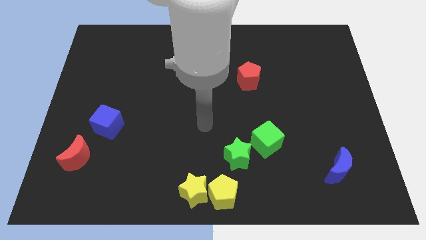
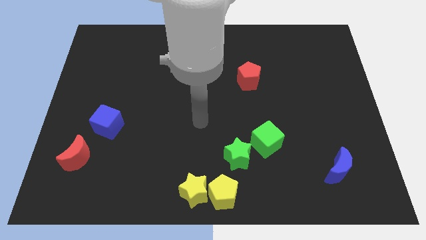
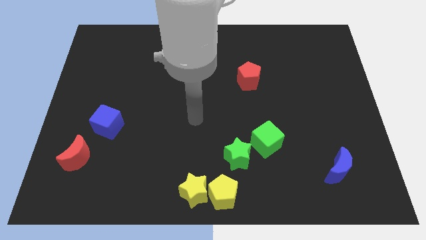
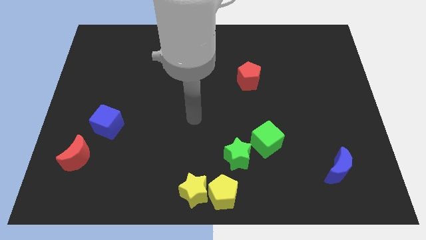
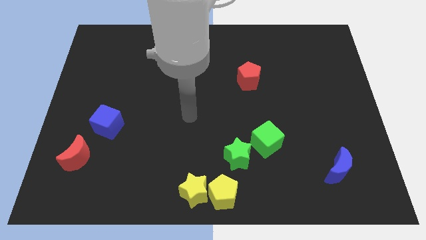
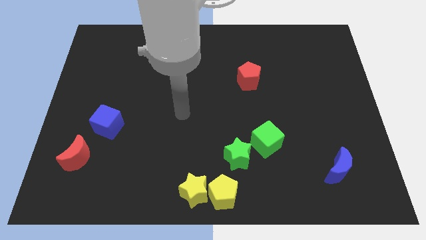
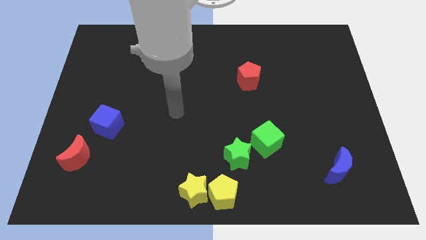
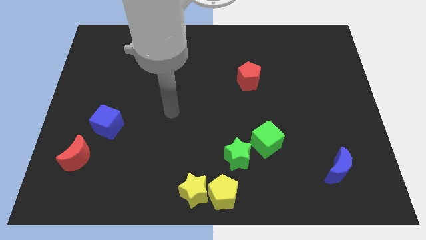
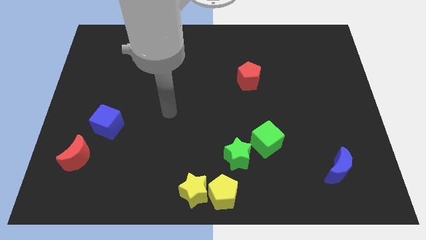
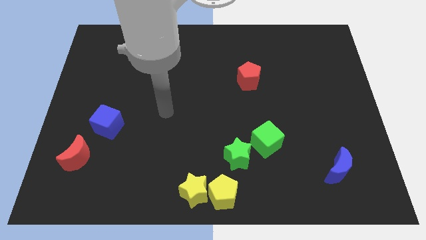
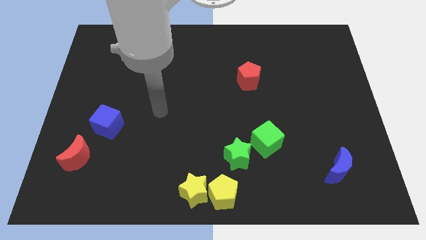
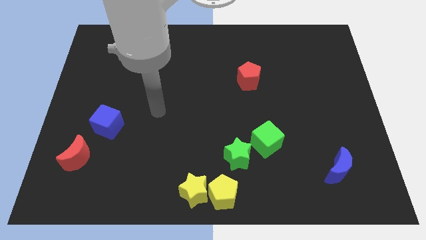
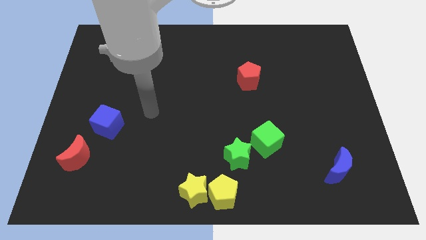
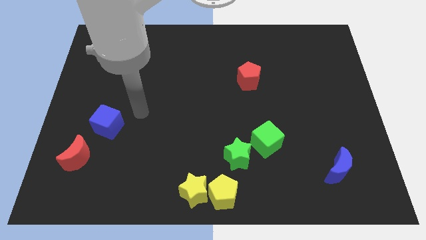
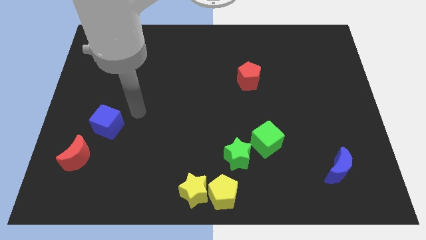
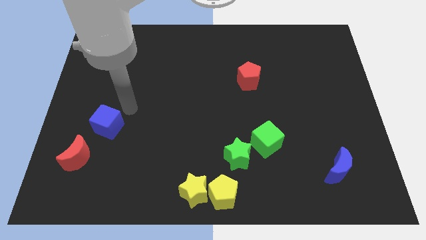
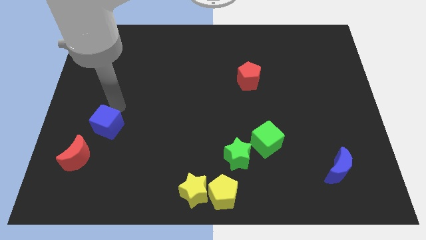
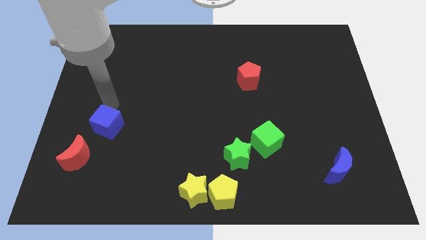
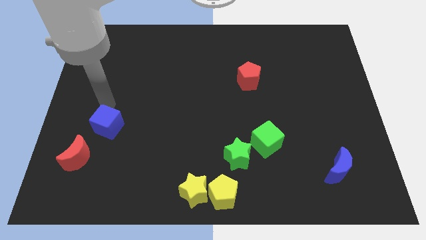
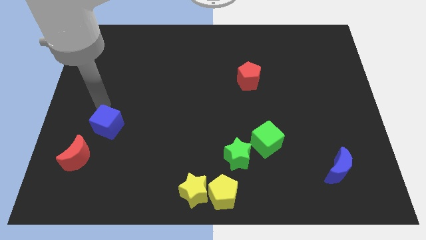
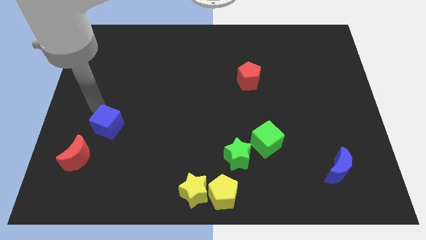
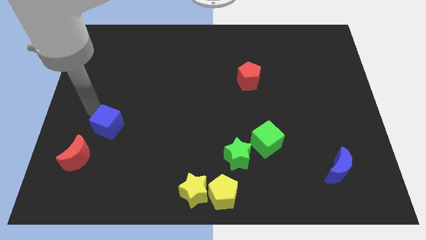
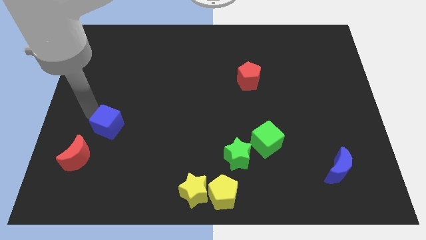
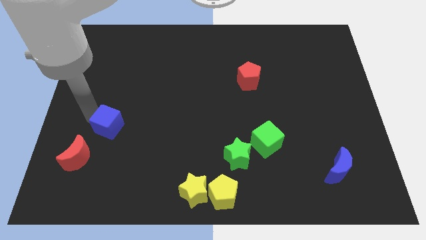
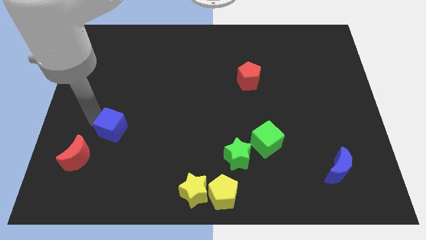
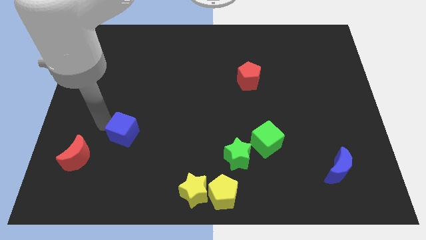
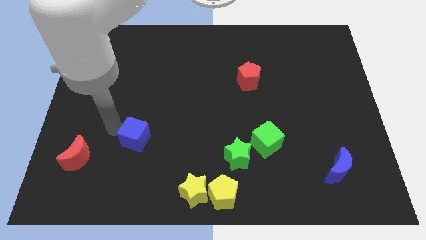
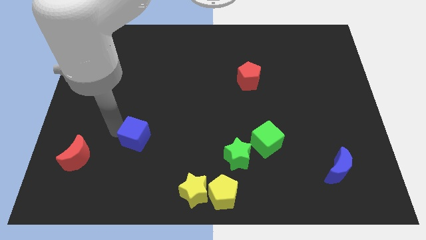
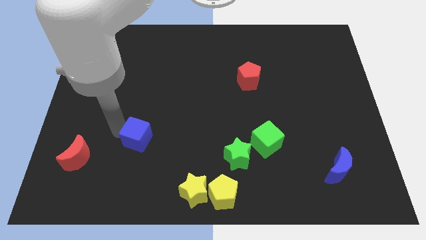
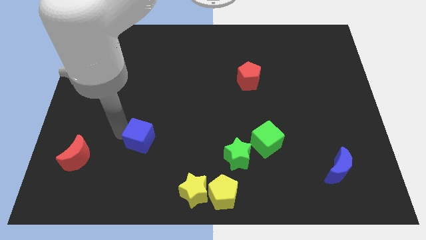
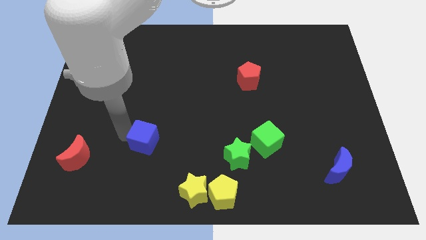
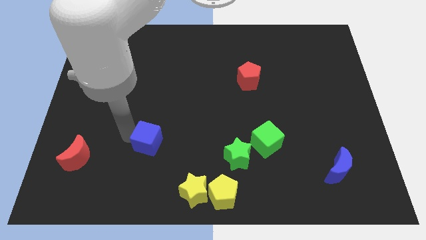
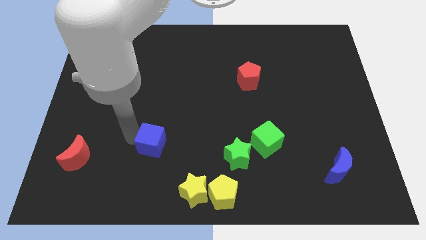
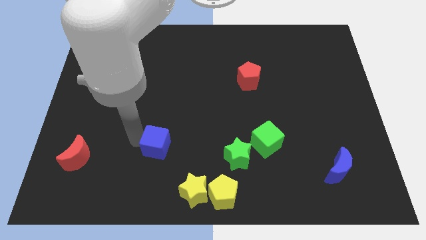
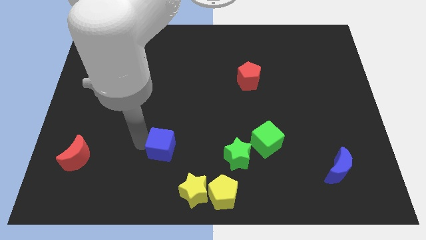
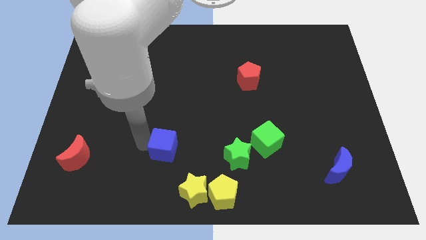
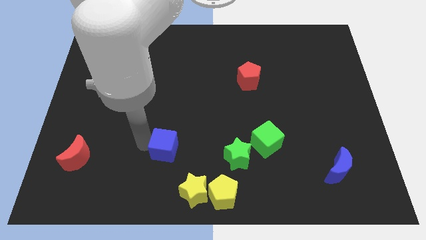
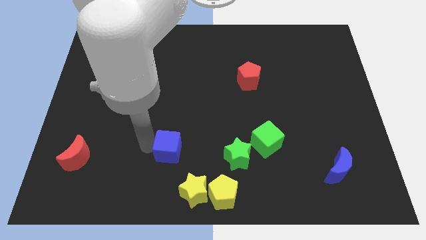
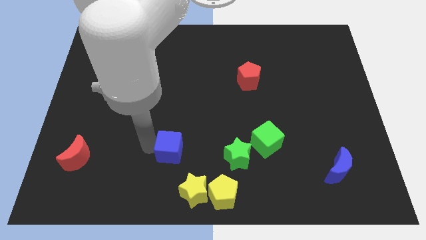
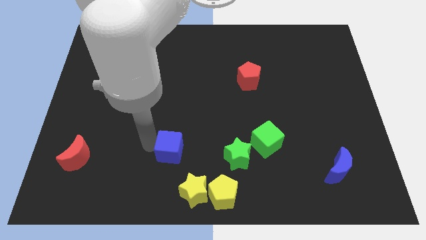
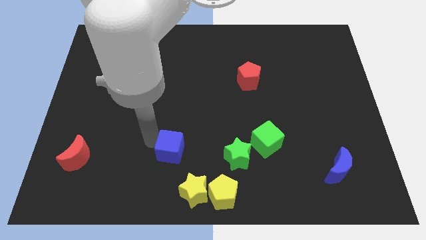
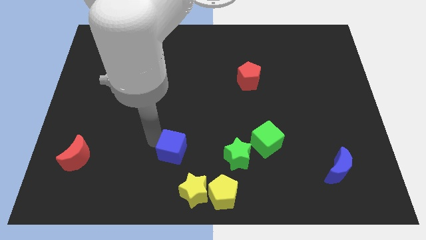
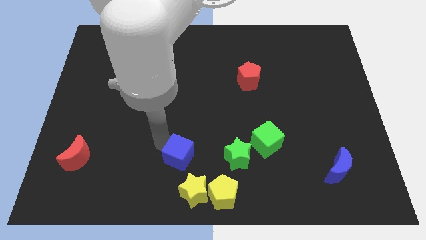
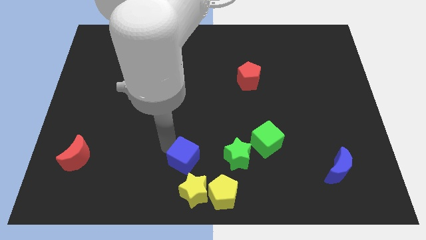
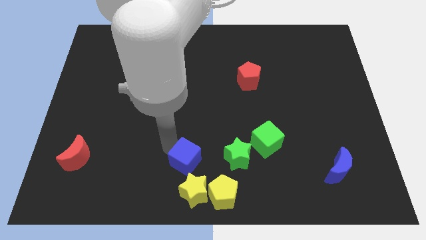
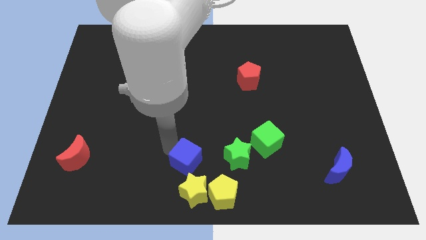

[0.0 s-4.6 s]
push the blue cube slightly towards the yellow star

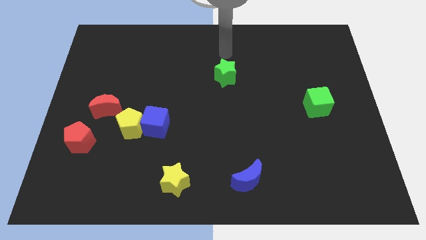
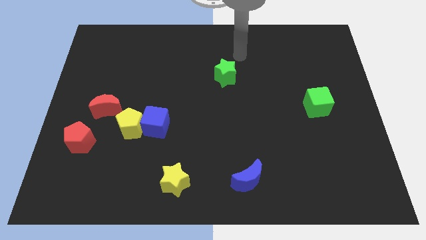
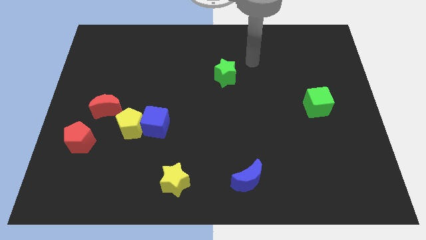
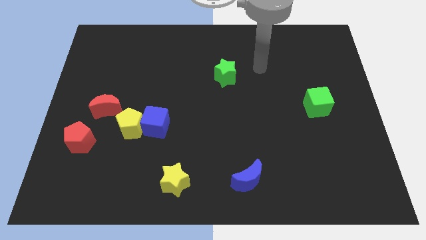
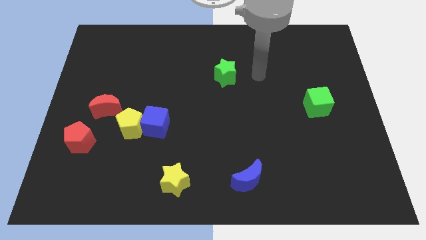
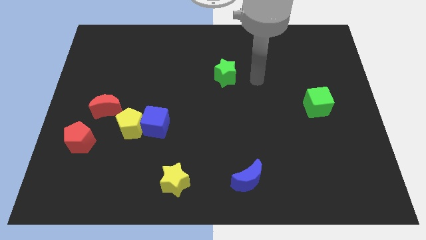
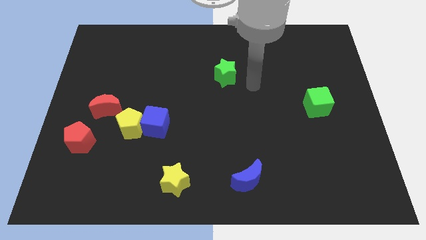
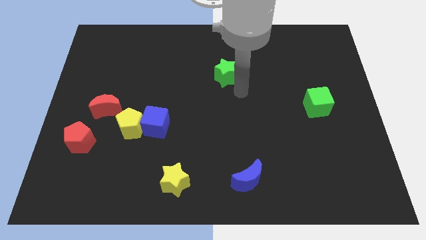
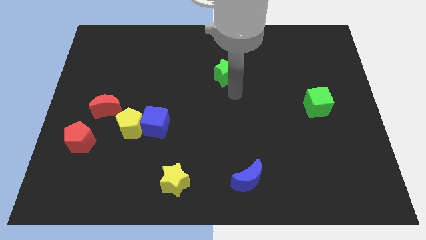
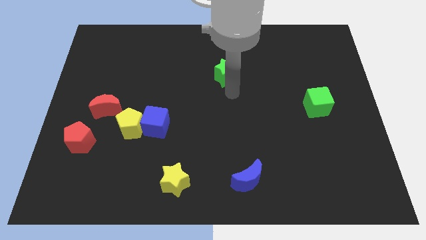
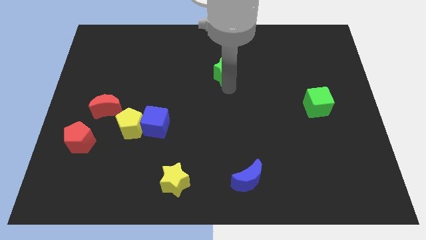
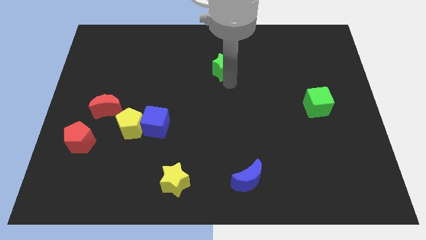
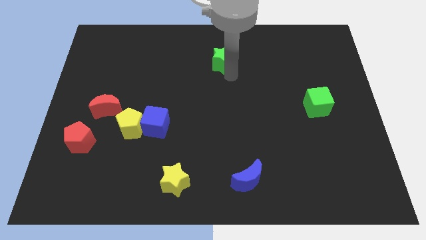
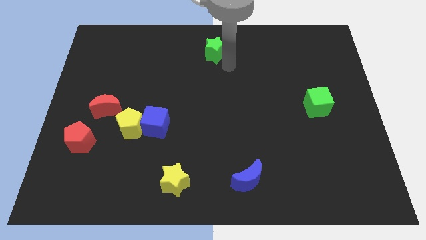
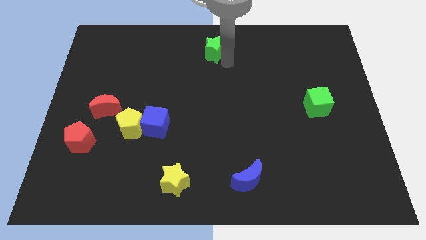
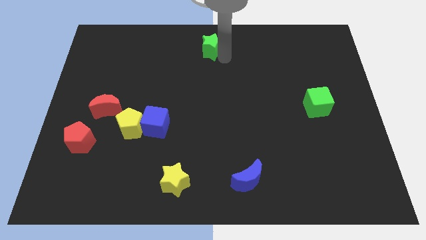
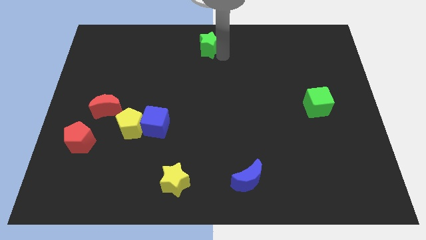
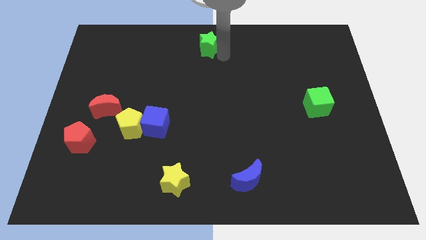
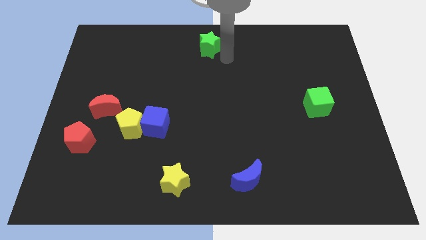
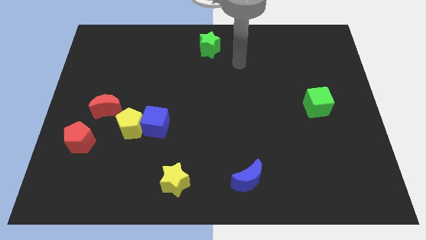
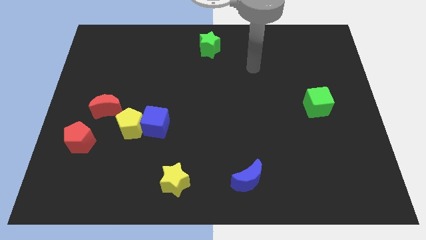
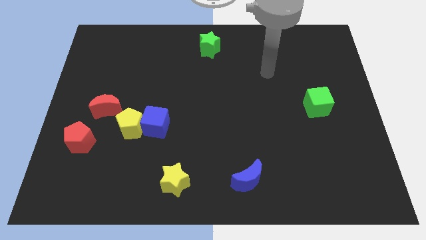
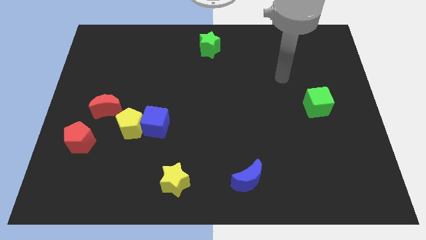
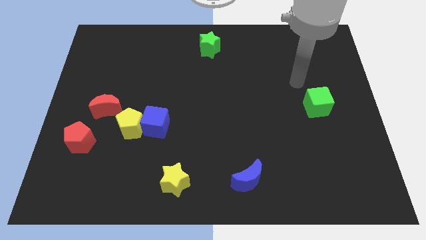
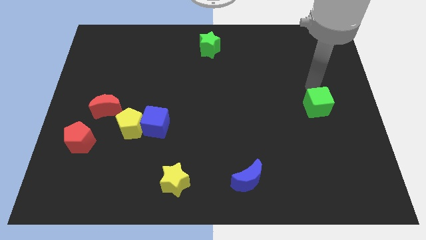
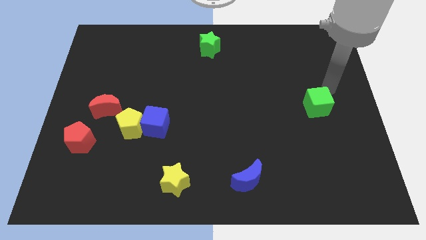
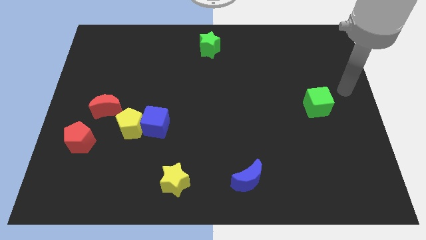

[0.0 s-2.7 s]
move the green star to the top middle of the board

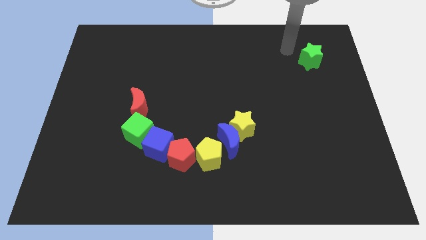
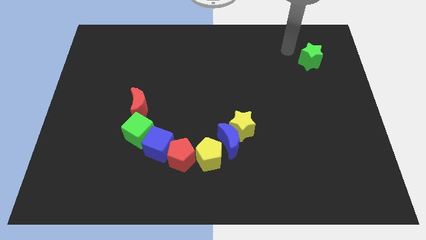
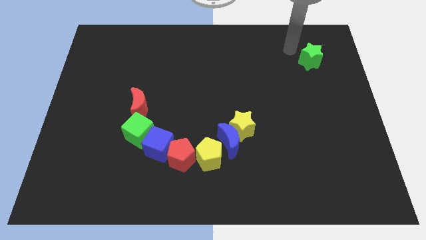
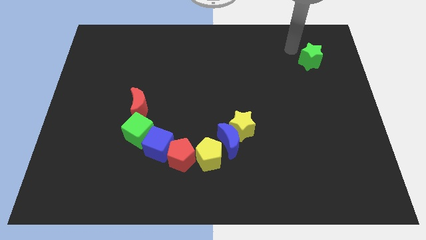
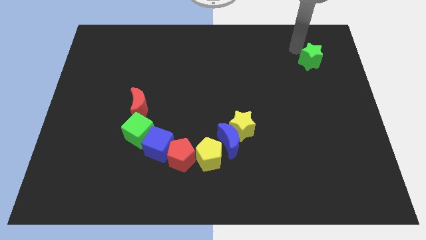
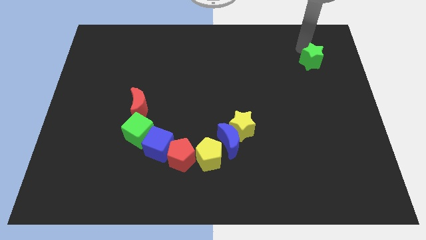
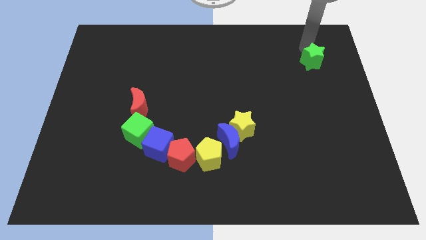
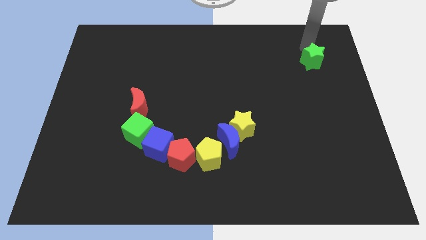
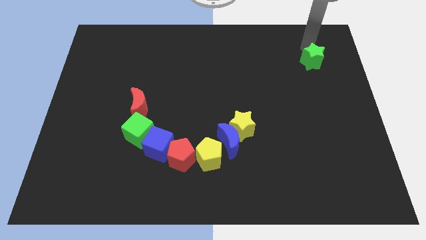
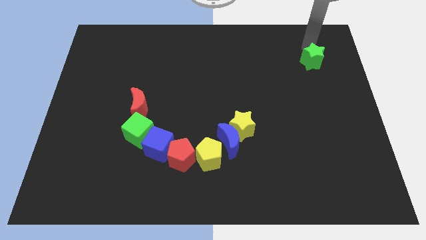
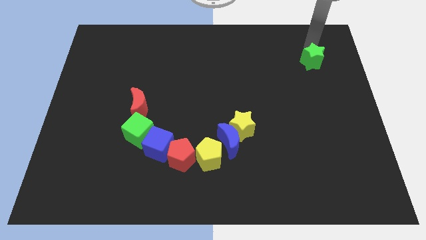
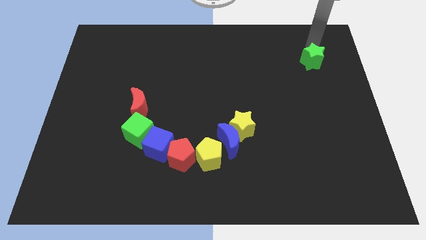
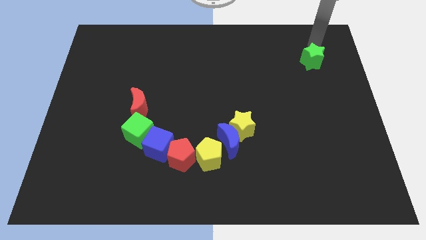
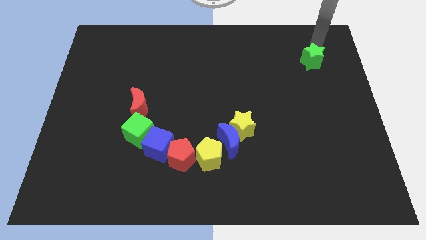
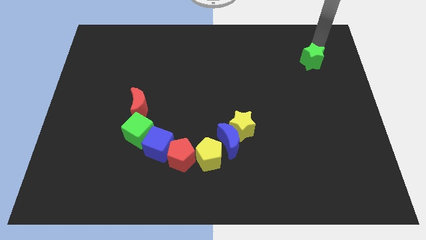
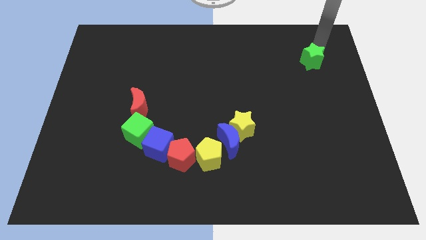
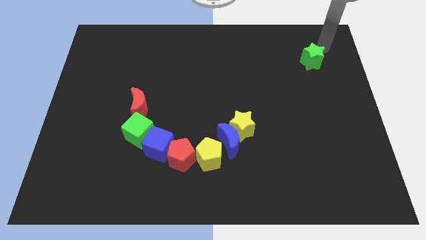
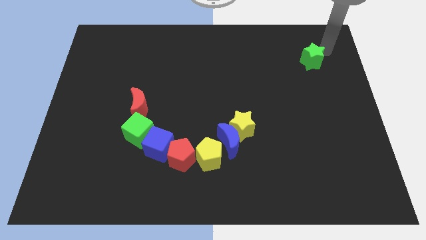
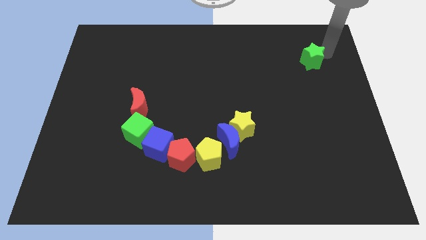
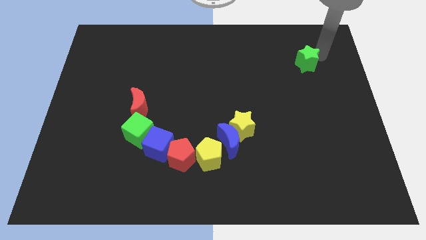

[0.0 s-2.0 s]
touch the top side of the green star
